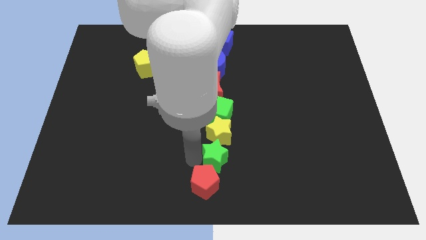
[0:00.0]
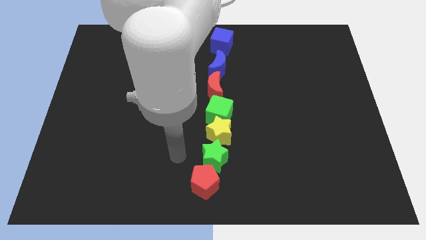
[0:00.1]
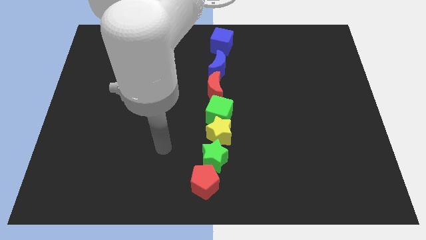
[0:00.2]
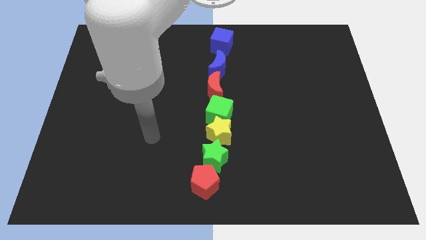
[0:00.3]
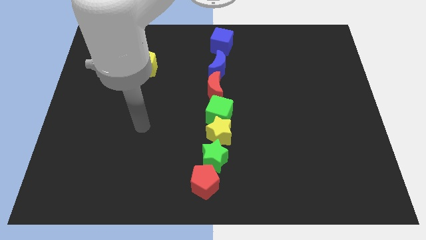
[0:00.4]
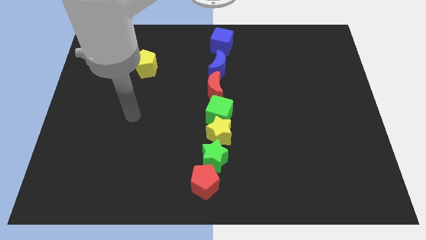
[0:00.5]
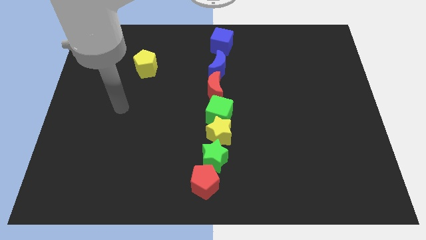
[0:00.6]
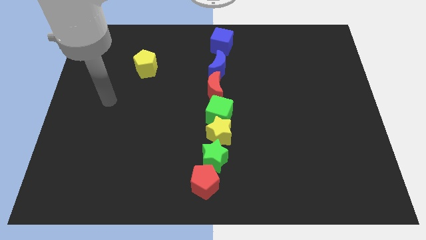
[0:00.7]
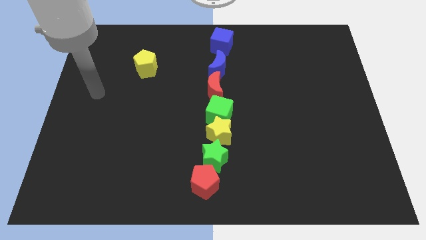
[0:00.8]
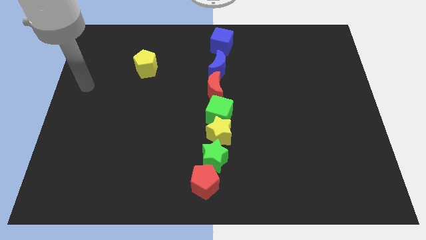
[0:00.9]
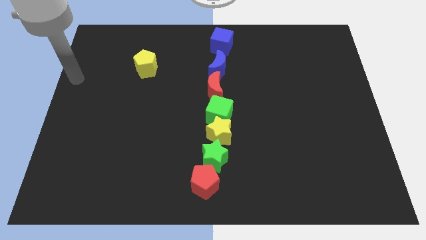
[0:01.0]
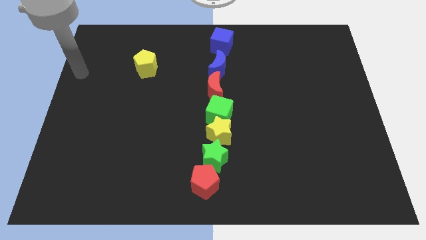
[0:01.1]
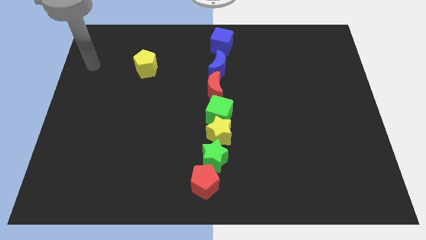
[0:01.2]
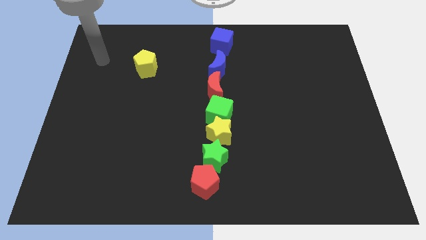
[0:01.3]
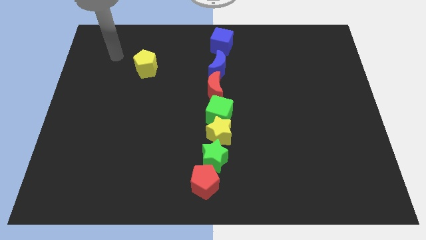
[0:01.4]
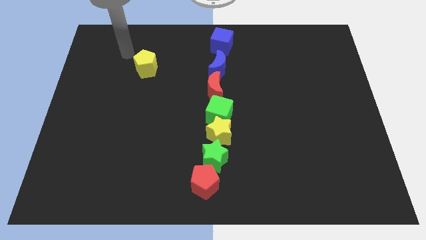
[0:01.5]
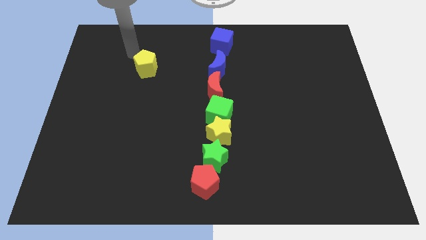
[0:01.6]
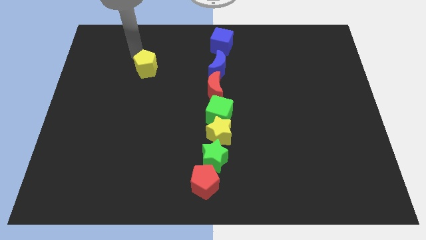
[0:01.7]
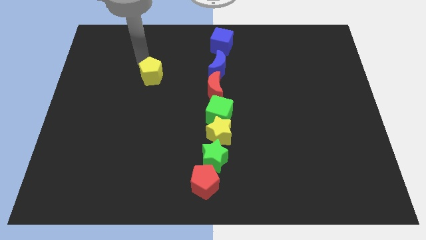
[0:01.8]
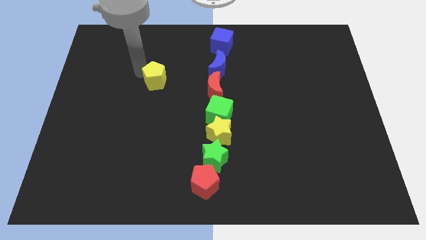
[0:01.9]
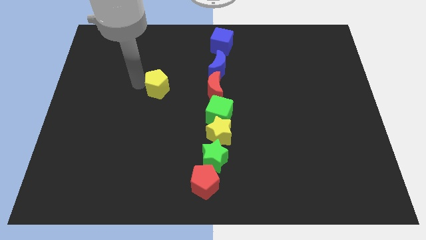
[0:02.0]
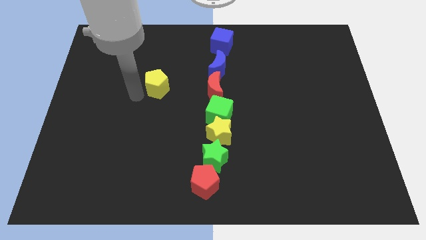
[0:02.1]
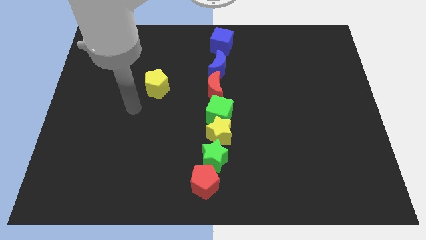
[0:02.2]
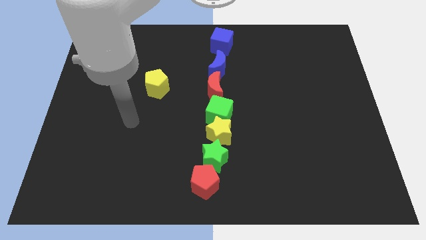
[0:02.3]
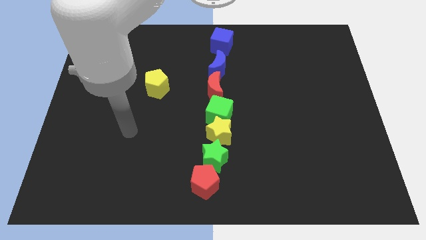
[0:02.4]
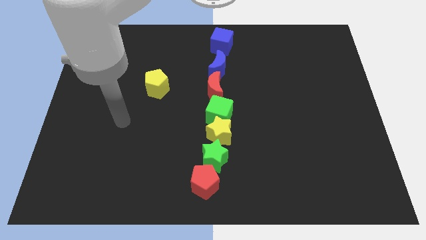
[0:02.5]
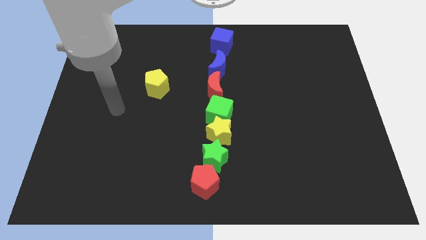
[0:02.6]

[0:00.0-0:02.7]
push the yellow pentagon down slightly

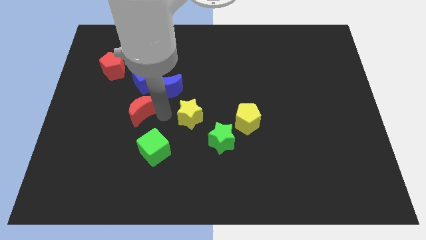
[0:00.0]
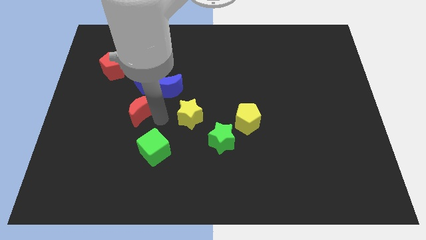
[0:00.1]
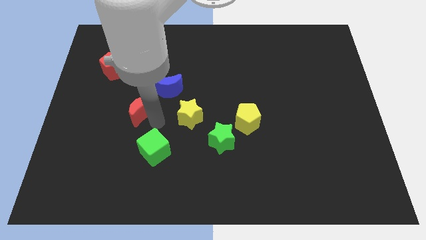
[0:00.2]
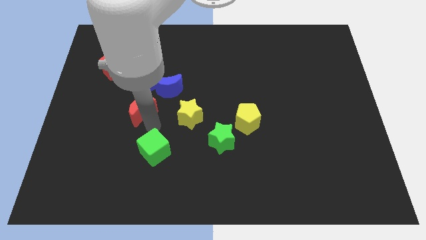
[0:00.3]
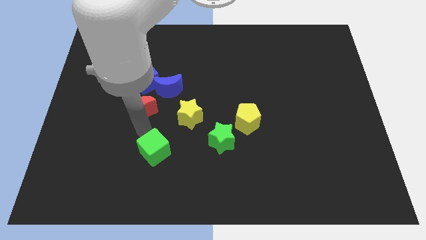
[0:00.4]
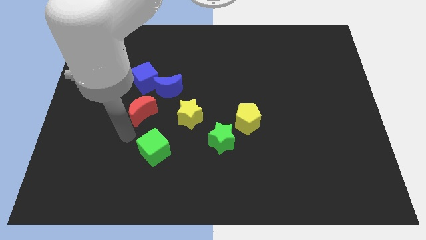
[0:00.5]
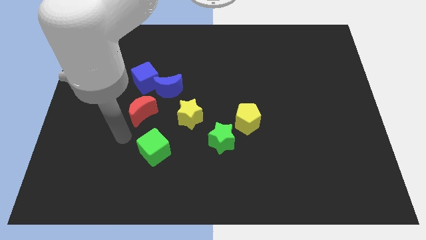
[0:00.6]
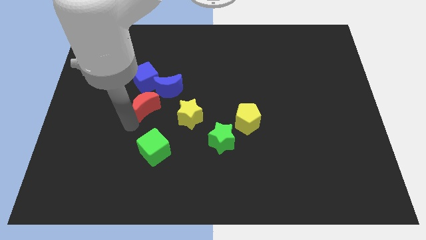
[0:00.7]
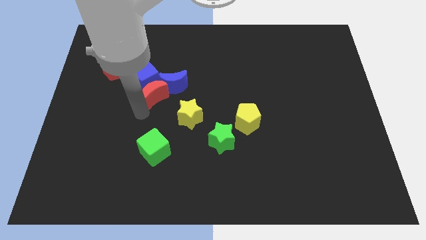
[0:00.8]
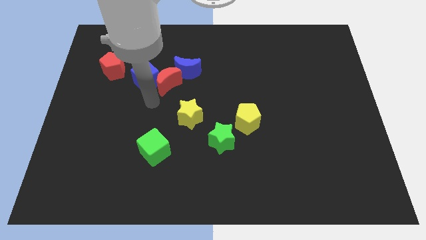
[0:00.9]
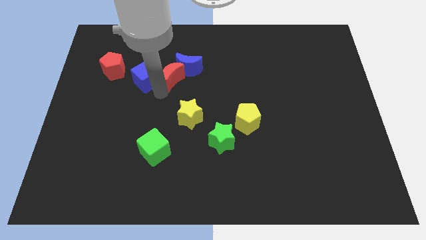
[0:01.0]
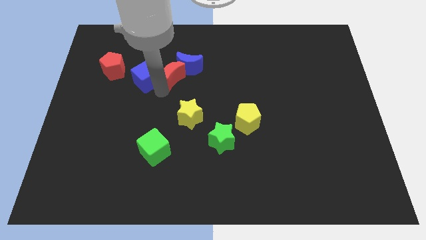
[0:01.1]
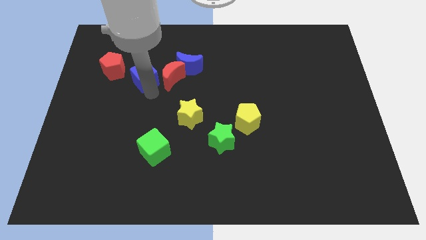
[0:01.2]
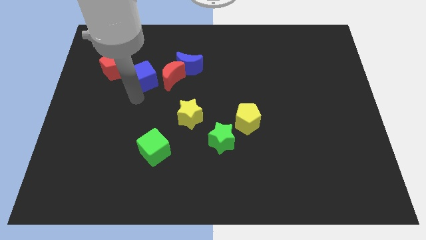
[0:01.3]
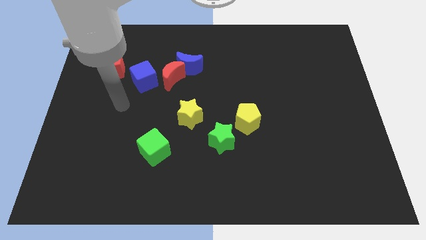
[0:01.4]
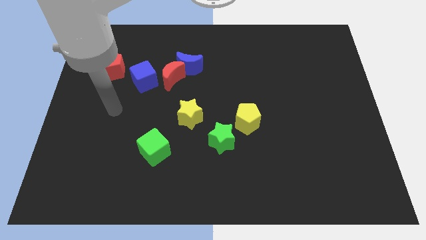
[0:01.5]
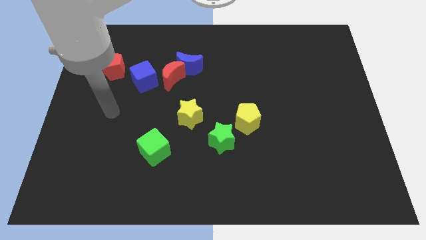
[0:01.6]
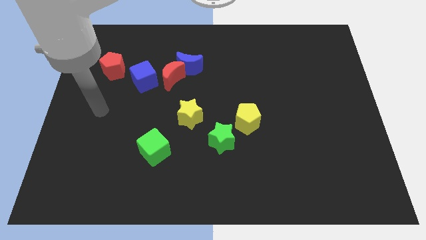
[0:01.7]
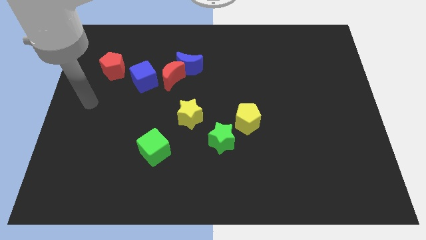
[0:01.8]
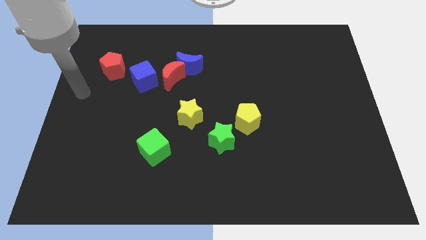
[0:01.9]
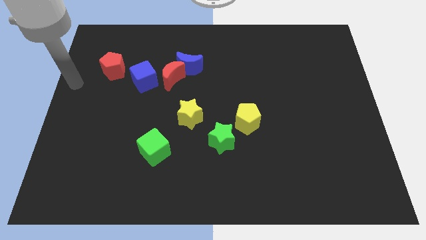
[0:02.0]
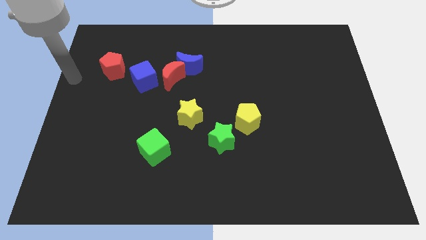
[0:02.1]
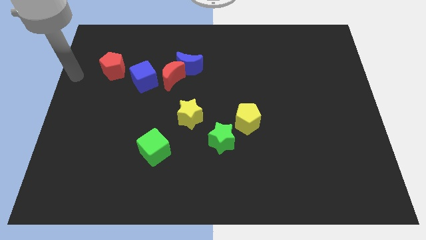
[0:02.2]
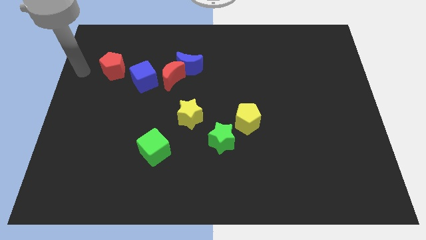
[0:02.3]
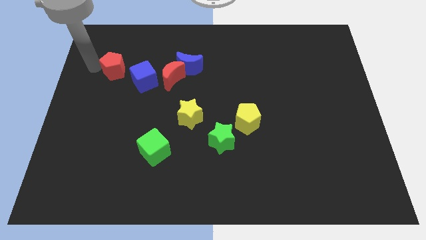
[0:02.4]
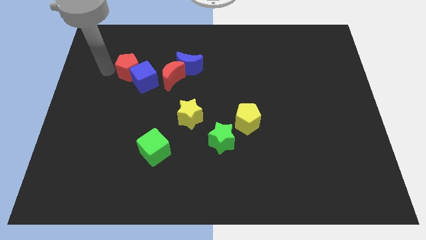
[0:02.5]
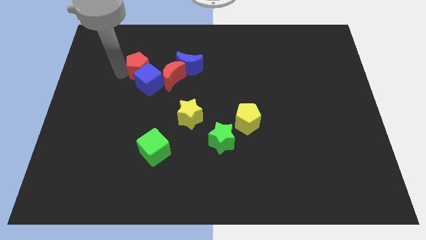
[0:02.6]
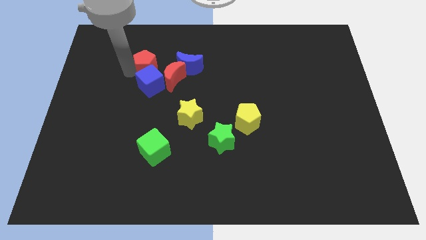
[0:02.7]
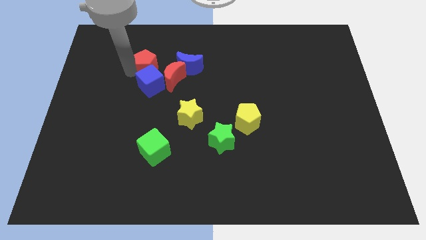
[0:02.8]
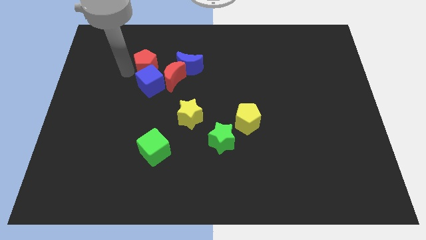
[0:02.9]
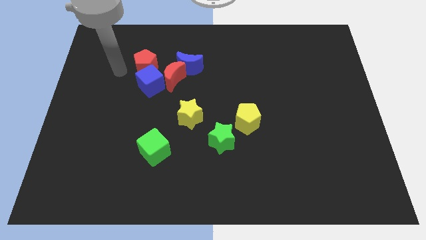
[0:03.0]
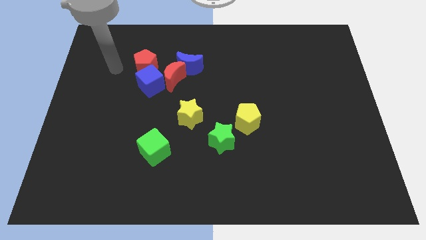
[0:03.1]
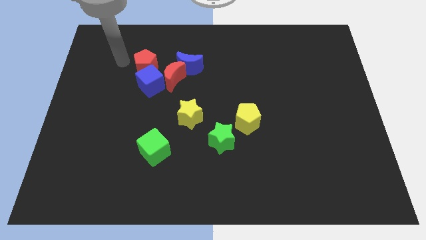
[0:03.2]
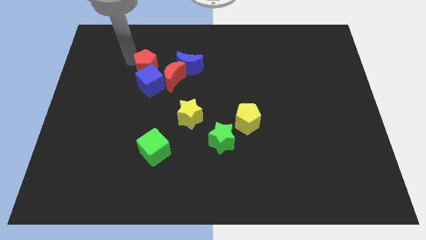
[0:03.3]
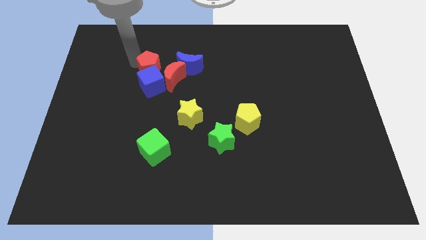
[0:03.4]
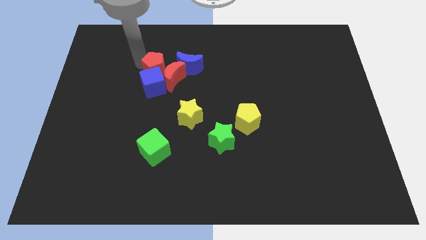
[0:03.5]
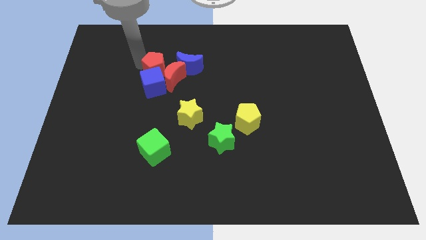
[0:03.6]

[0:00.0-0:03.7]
place the red pentagon to the top of the red crescent

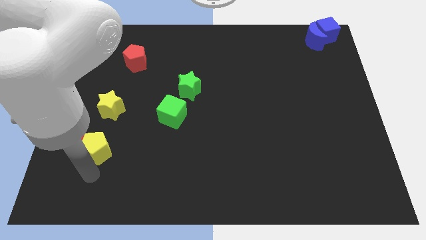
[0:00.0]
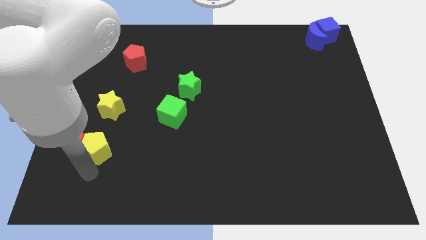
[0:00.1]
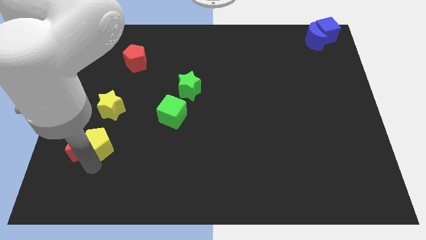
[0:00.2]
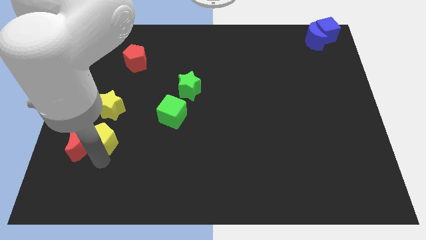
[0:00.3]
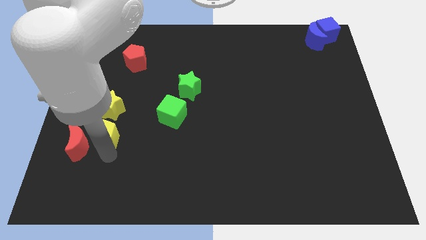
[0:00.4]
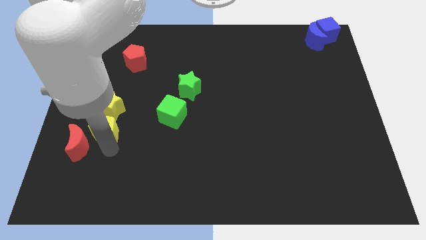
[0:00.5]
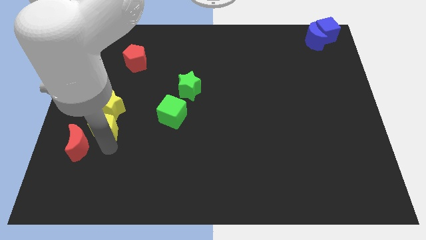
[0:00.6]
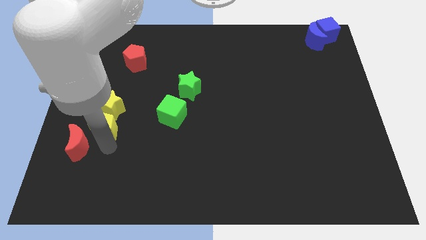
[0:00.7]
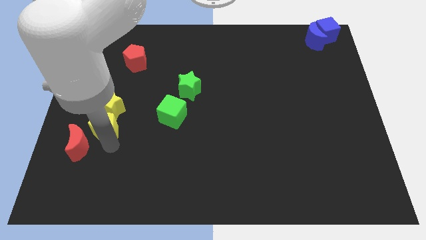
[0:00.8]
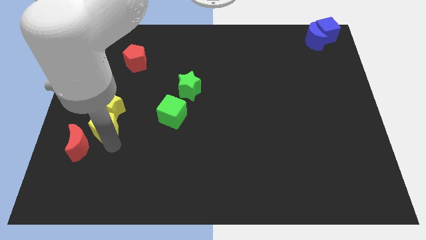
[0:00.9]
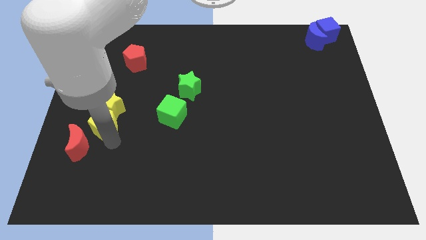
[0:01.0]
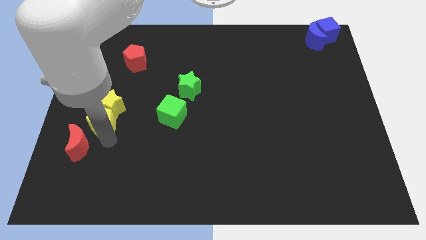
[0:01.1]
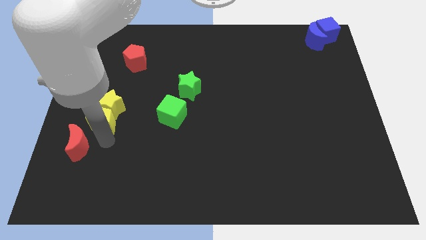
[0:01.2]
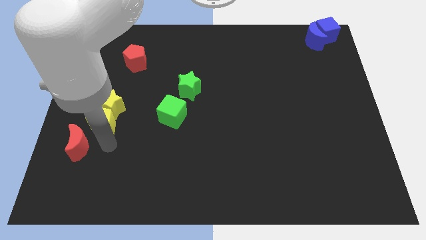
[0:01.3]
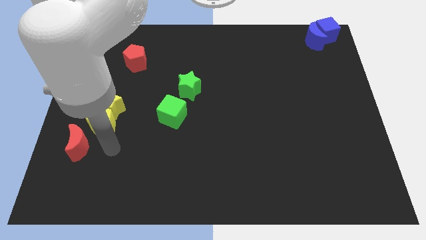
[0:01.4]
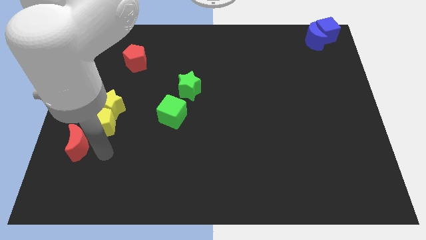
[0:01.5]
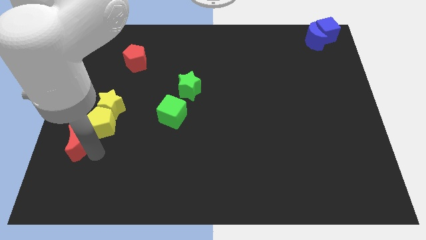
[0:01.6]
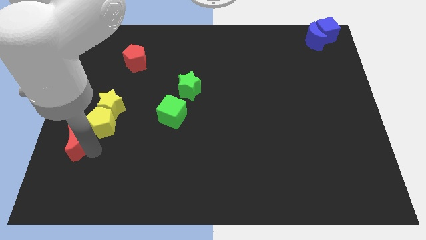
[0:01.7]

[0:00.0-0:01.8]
put the yellow pentagon at the bottom of the yellow star

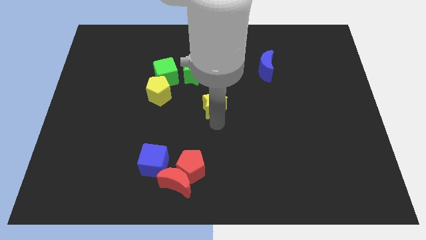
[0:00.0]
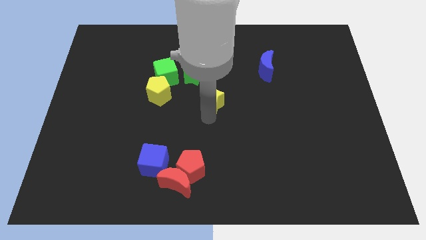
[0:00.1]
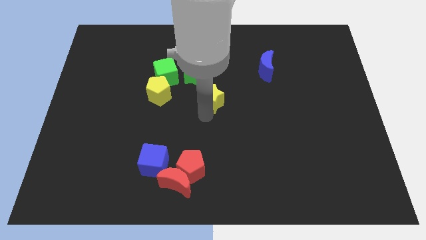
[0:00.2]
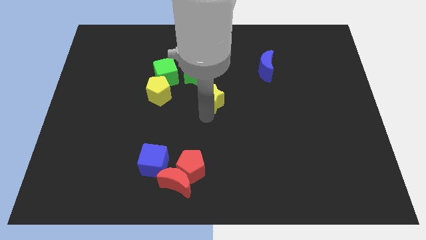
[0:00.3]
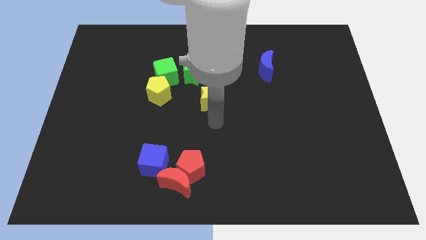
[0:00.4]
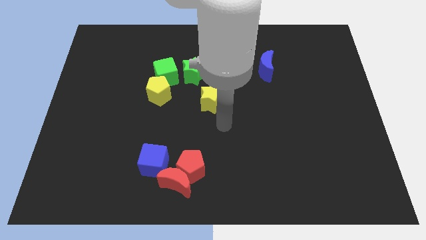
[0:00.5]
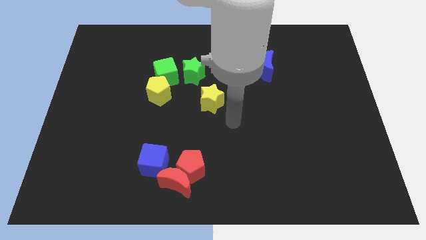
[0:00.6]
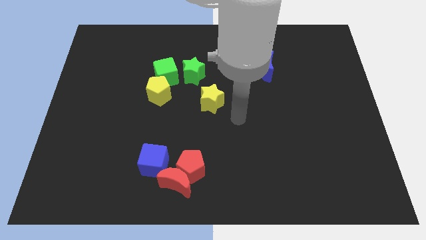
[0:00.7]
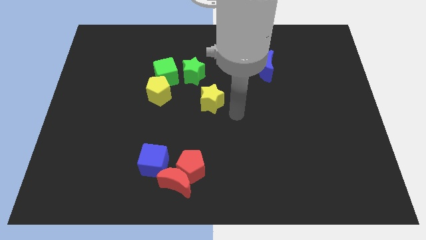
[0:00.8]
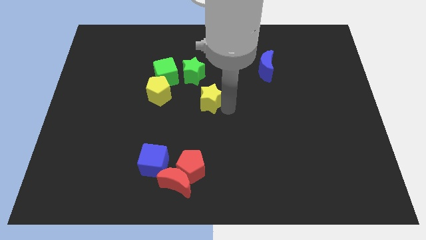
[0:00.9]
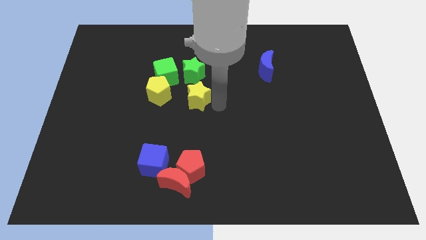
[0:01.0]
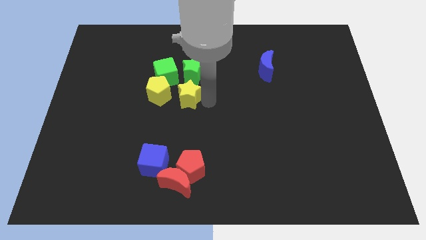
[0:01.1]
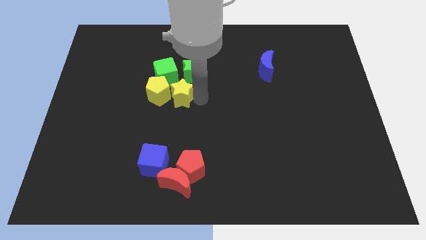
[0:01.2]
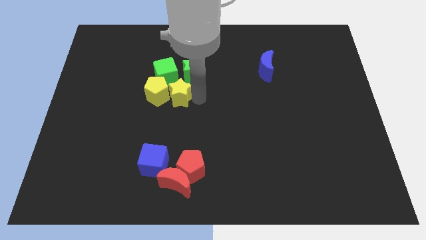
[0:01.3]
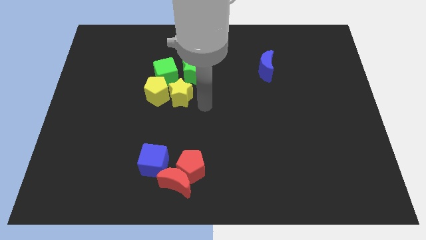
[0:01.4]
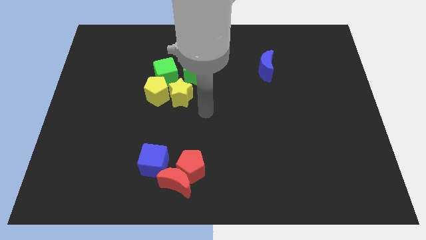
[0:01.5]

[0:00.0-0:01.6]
place the yellow star to the right side of the yellow pentagon
